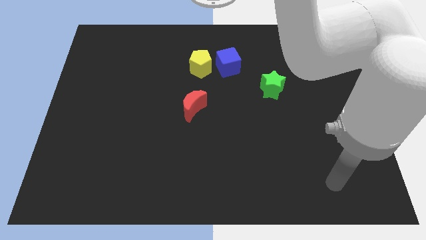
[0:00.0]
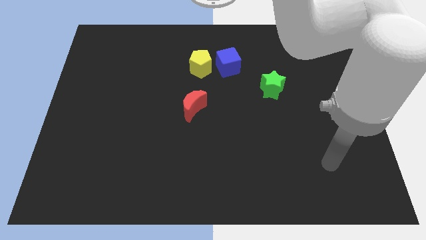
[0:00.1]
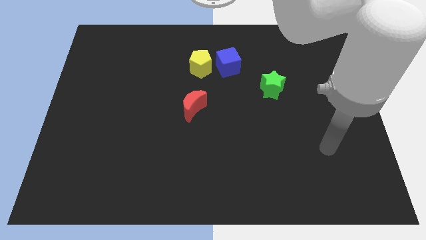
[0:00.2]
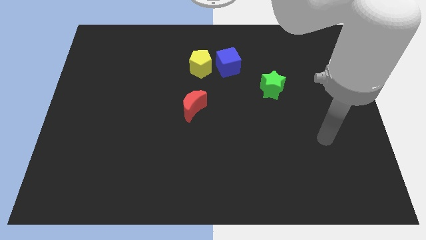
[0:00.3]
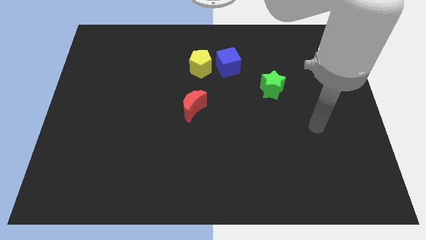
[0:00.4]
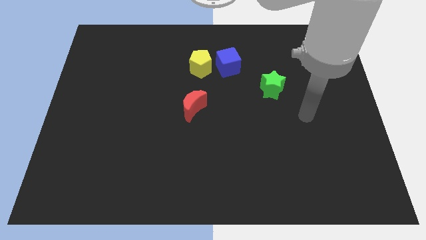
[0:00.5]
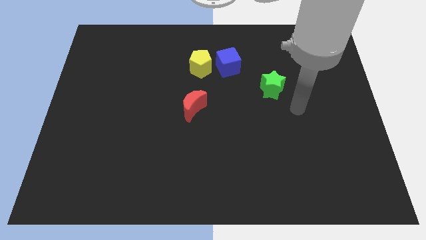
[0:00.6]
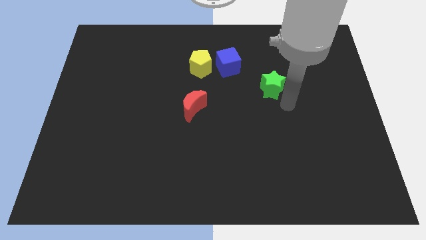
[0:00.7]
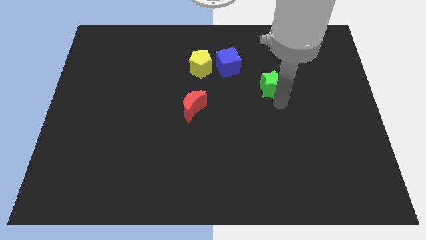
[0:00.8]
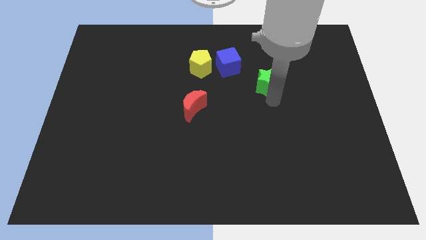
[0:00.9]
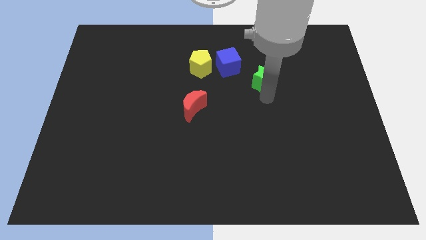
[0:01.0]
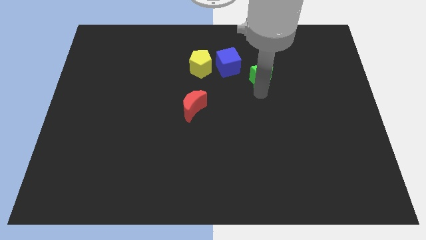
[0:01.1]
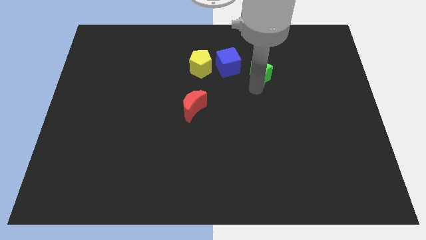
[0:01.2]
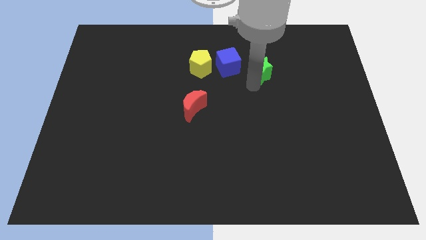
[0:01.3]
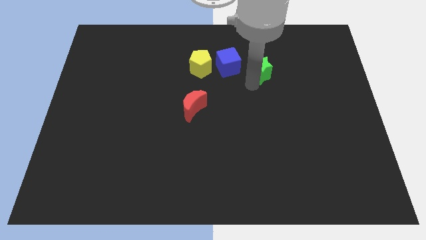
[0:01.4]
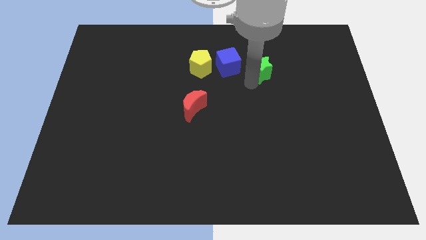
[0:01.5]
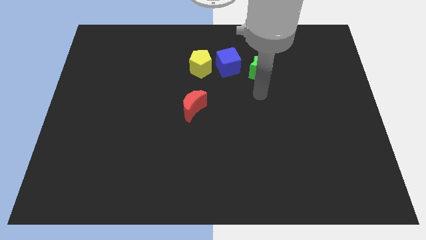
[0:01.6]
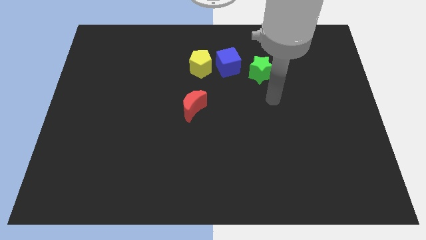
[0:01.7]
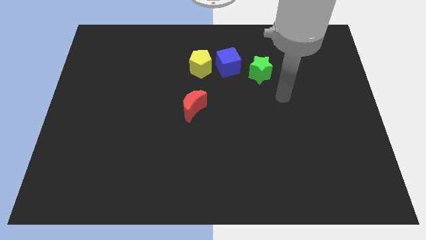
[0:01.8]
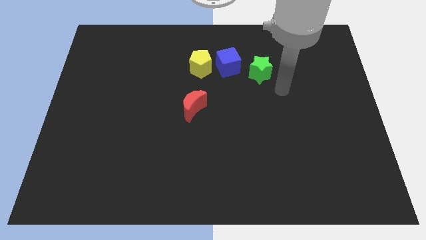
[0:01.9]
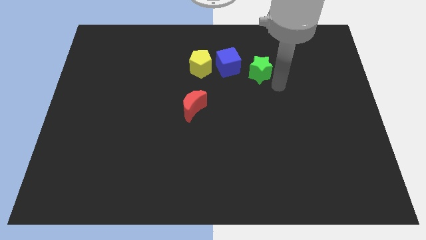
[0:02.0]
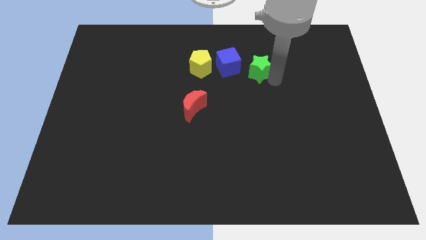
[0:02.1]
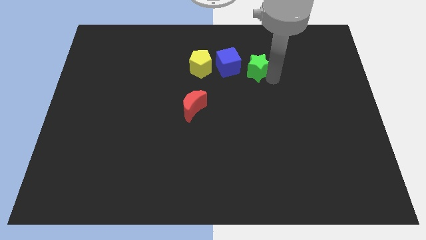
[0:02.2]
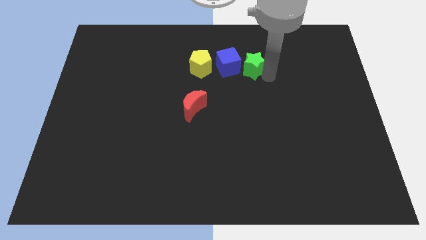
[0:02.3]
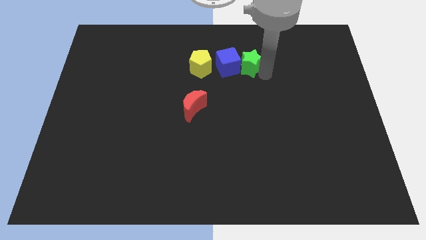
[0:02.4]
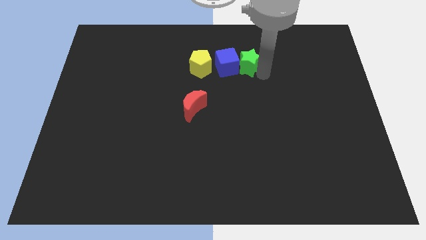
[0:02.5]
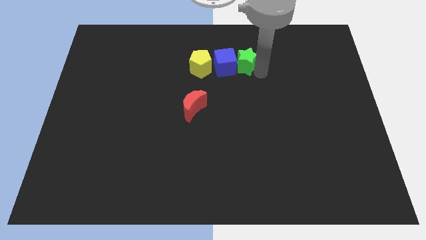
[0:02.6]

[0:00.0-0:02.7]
slide the green block towards the blue block

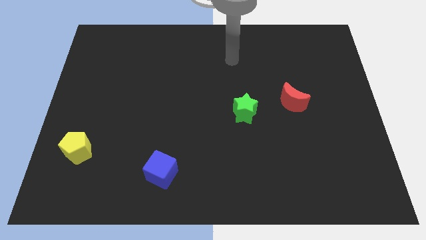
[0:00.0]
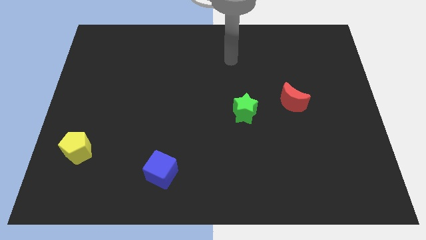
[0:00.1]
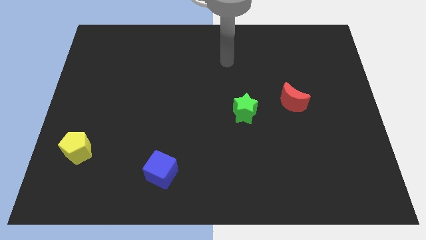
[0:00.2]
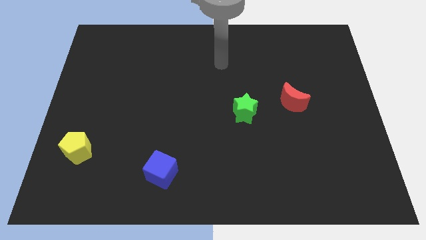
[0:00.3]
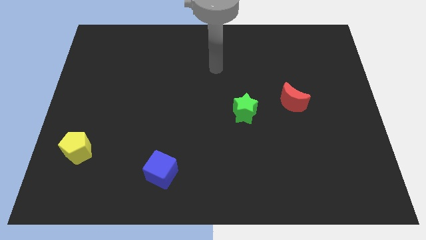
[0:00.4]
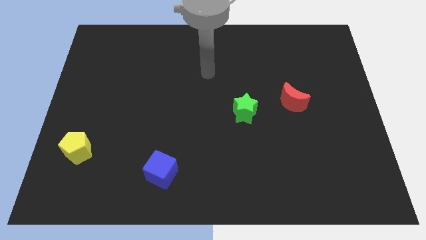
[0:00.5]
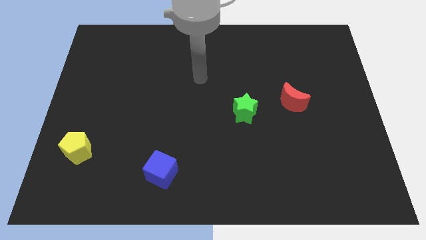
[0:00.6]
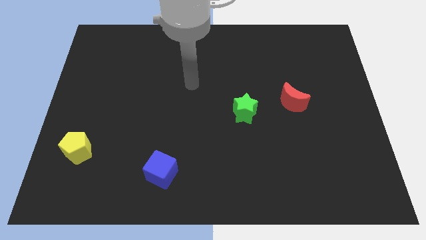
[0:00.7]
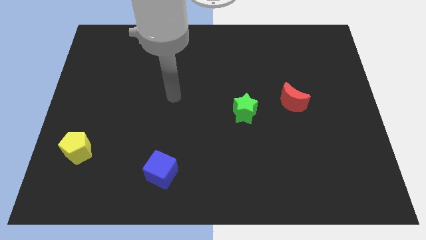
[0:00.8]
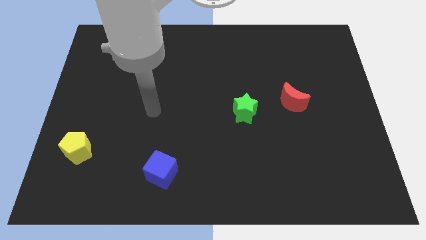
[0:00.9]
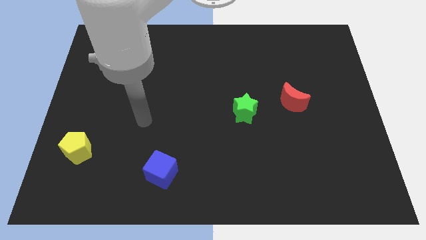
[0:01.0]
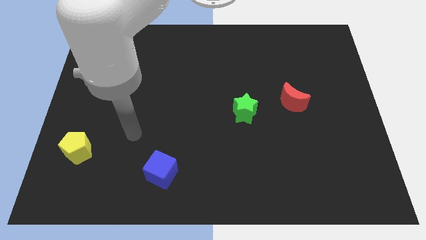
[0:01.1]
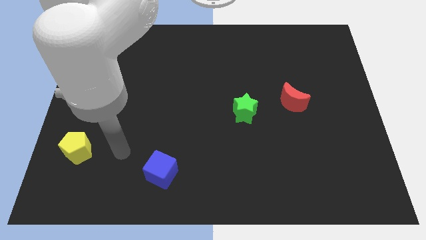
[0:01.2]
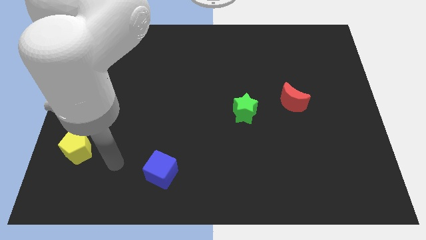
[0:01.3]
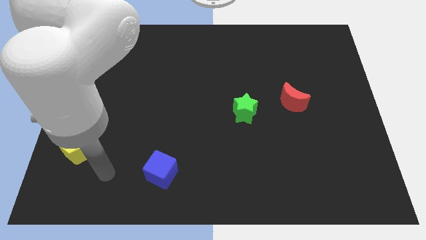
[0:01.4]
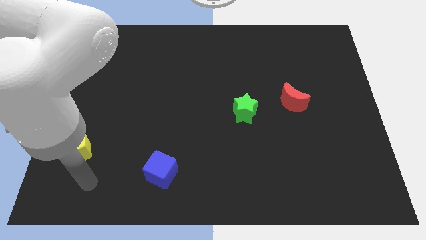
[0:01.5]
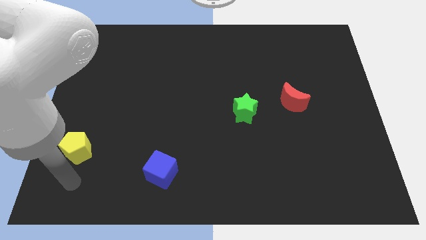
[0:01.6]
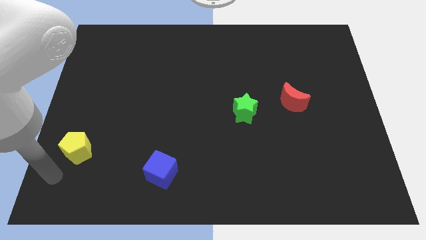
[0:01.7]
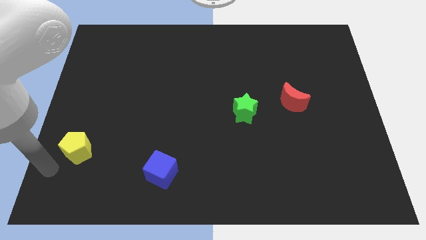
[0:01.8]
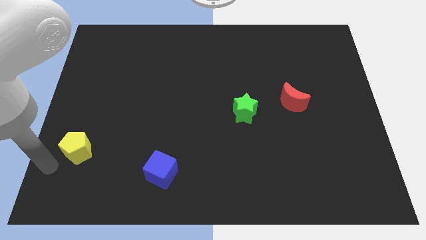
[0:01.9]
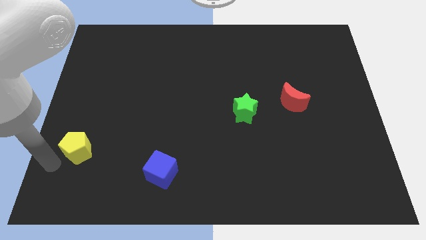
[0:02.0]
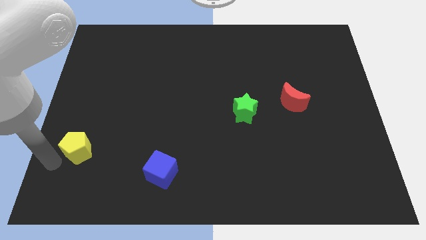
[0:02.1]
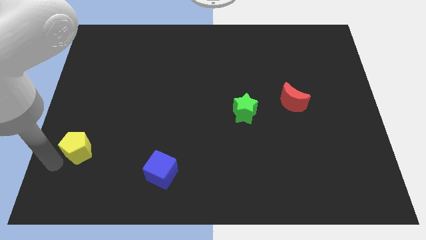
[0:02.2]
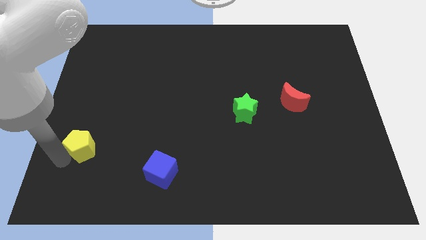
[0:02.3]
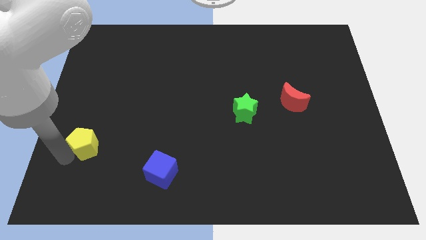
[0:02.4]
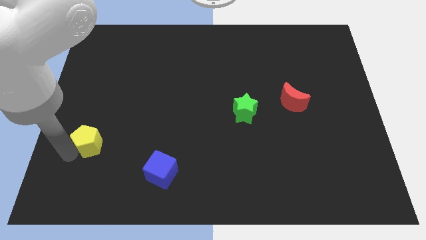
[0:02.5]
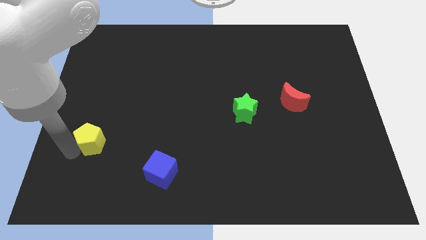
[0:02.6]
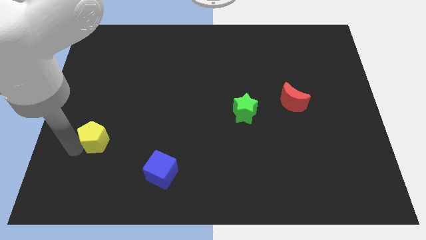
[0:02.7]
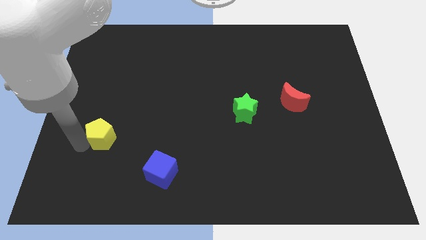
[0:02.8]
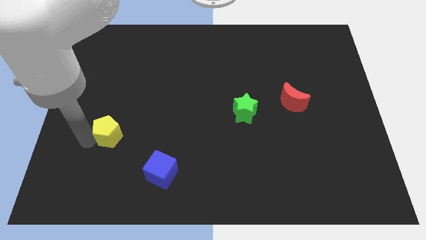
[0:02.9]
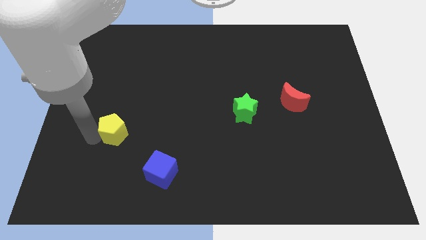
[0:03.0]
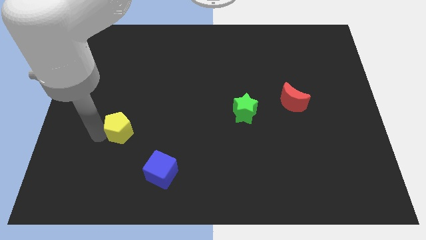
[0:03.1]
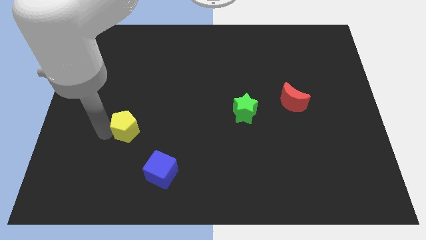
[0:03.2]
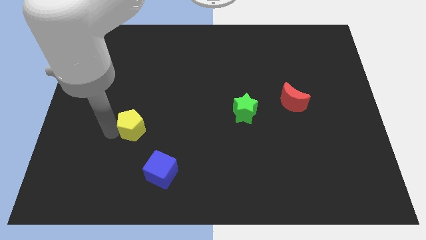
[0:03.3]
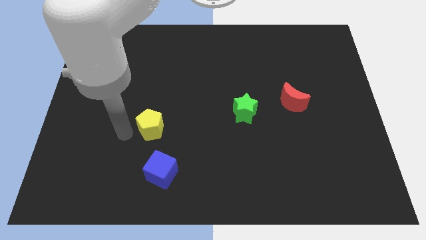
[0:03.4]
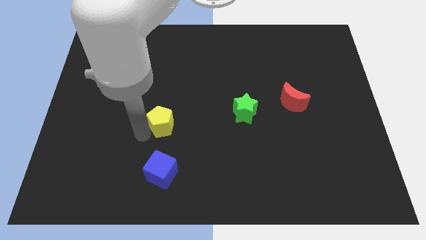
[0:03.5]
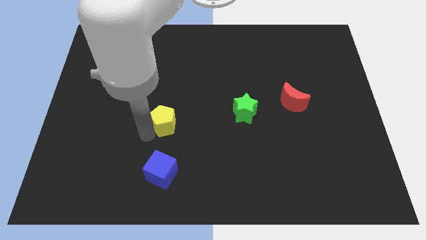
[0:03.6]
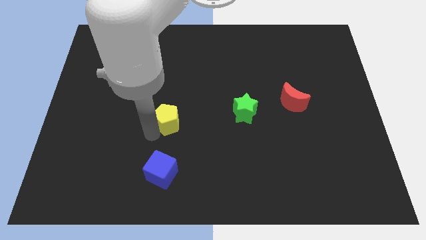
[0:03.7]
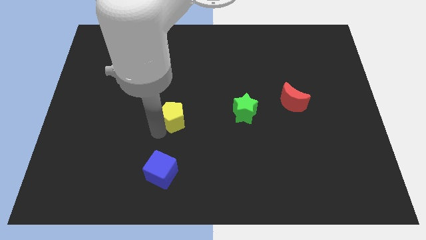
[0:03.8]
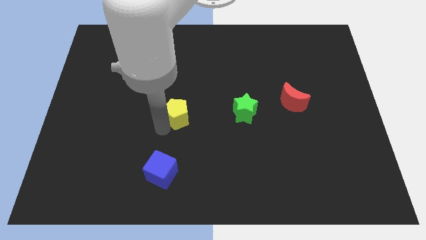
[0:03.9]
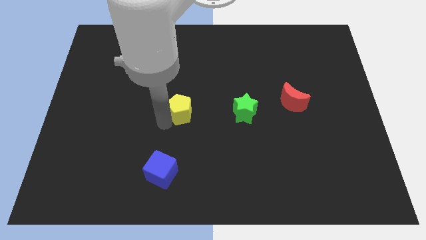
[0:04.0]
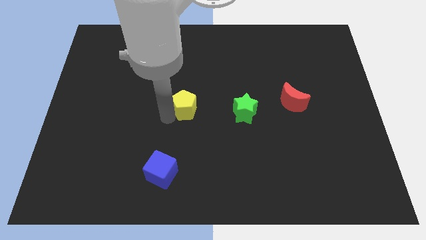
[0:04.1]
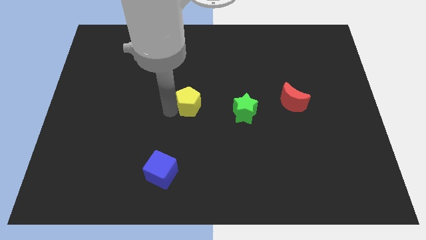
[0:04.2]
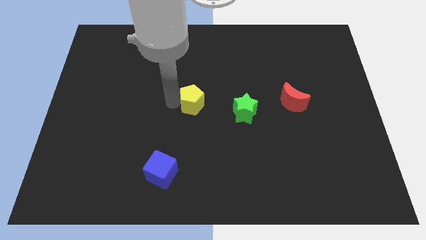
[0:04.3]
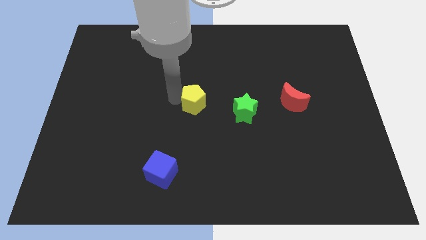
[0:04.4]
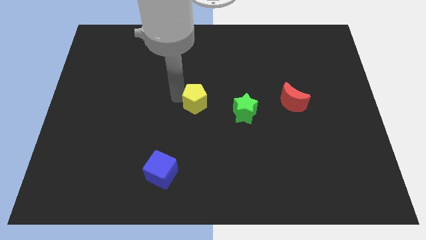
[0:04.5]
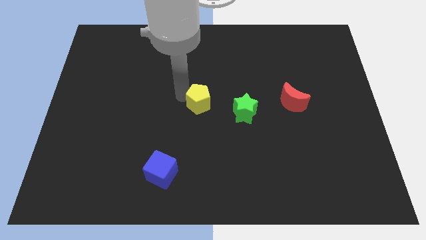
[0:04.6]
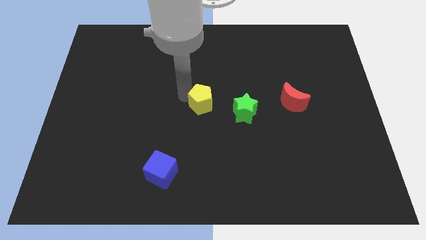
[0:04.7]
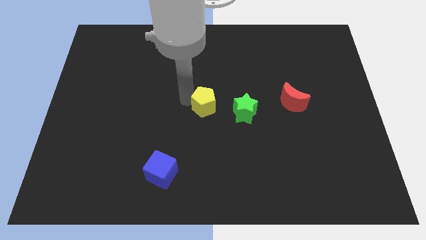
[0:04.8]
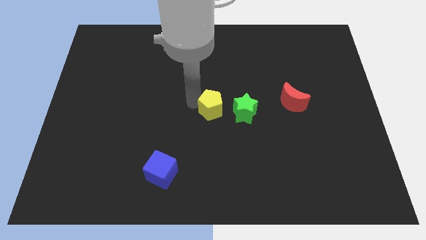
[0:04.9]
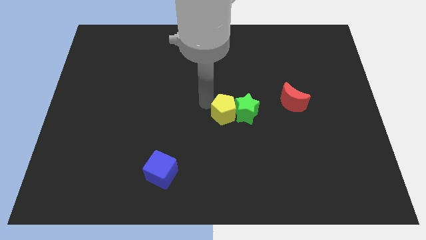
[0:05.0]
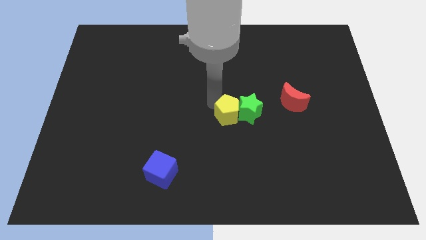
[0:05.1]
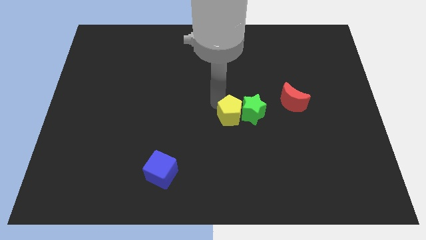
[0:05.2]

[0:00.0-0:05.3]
move the yellow block close to the green block

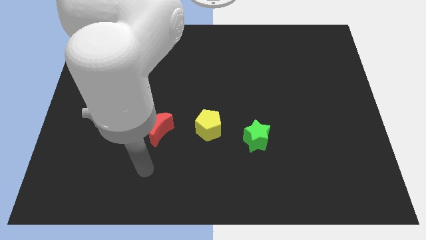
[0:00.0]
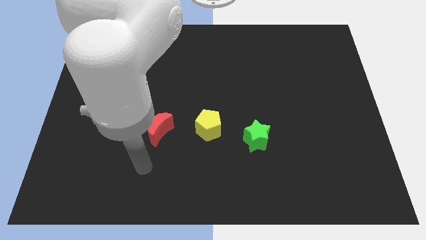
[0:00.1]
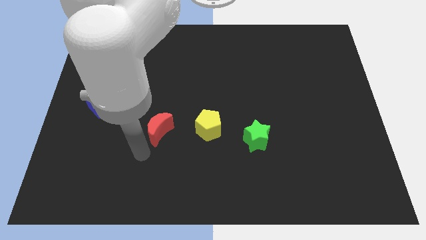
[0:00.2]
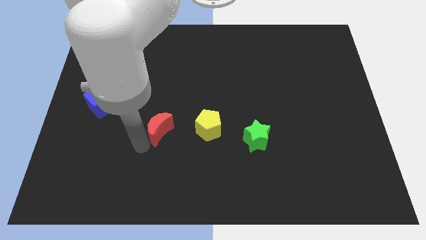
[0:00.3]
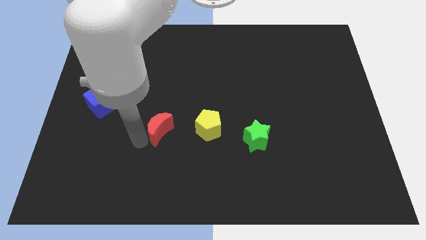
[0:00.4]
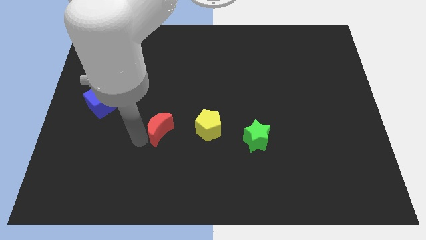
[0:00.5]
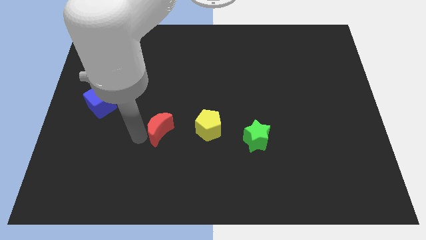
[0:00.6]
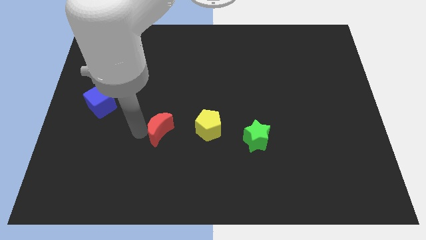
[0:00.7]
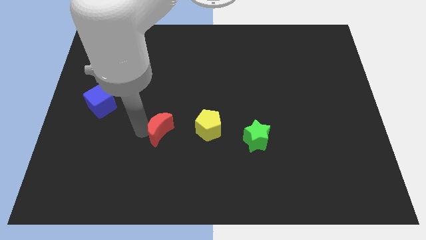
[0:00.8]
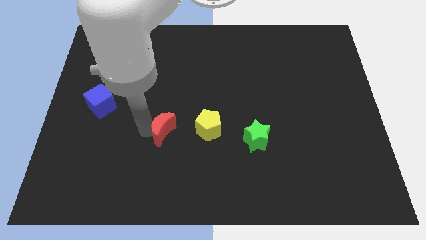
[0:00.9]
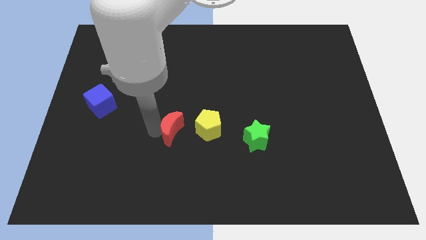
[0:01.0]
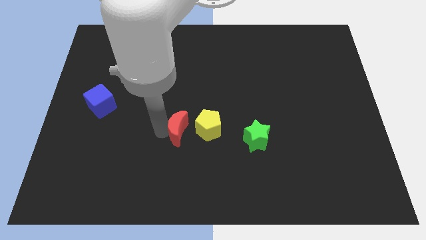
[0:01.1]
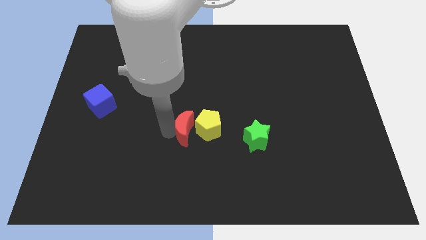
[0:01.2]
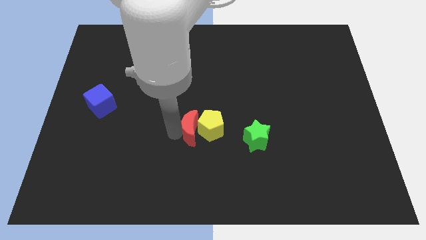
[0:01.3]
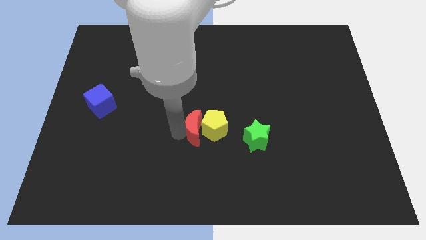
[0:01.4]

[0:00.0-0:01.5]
move the red moon to the yellow pentagon
